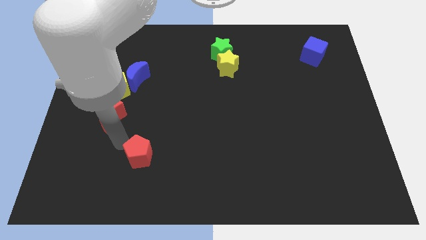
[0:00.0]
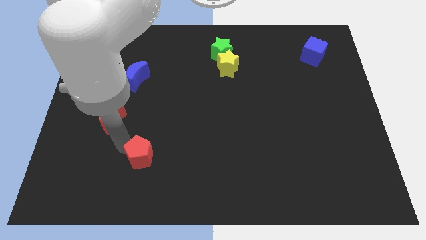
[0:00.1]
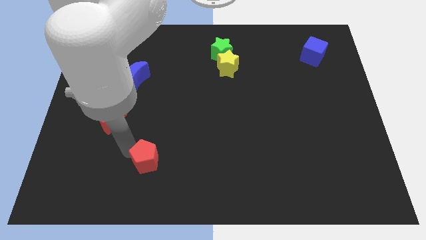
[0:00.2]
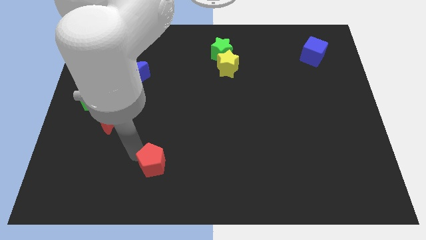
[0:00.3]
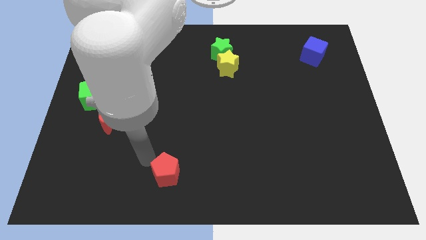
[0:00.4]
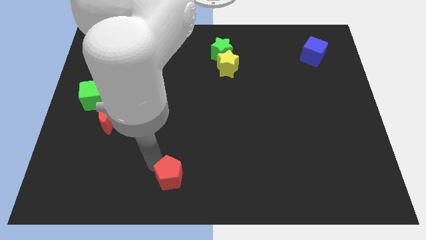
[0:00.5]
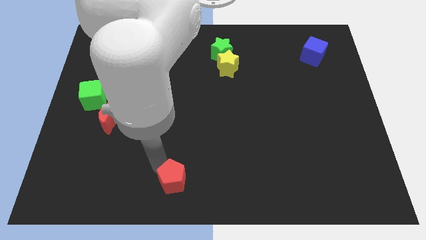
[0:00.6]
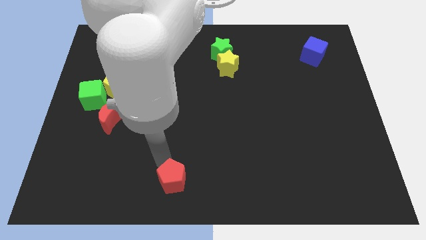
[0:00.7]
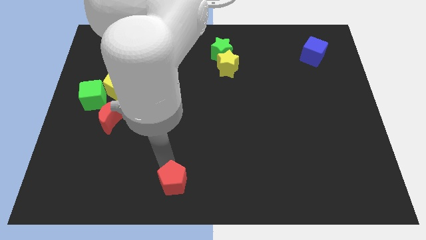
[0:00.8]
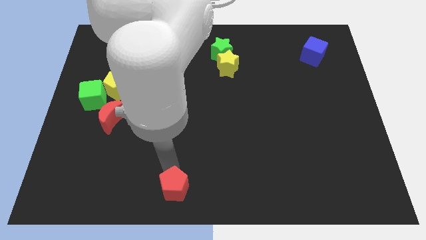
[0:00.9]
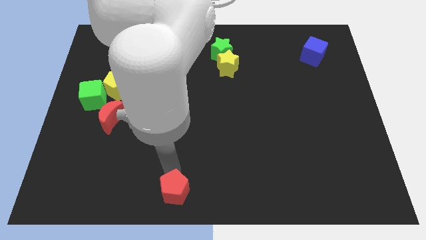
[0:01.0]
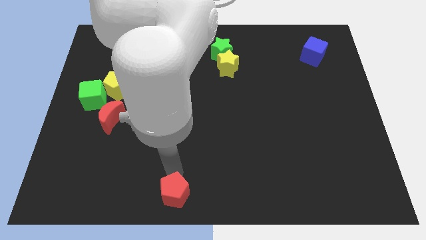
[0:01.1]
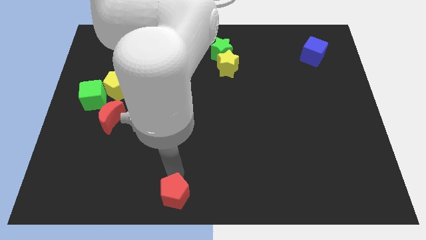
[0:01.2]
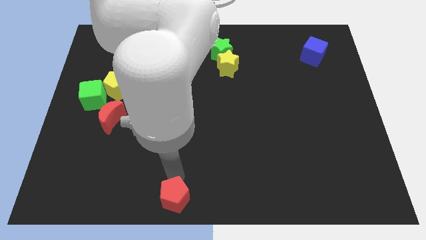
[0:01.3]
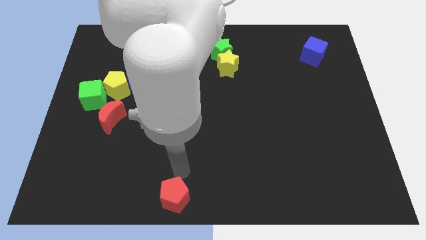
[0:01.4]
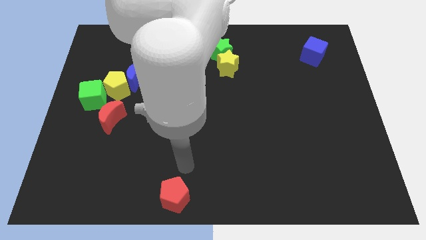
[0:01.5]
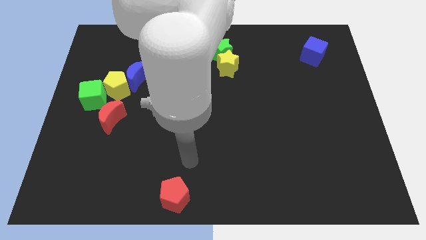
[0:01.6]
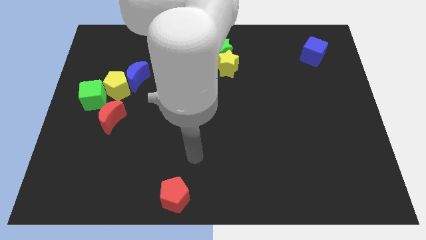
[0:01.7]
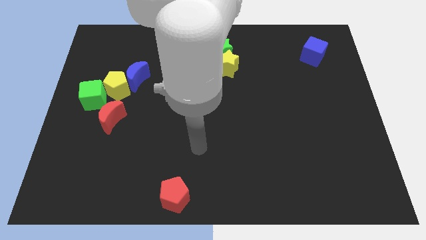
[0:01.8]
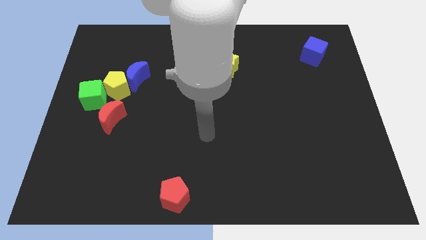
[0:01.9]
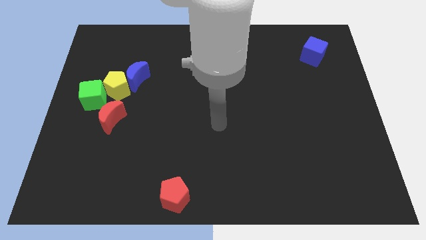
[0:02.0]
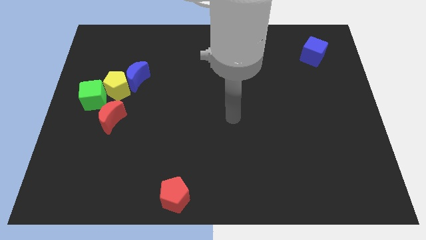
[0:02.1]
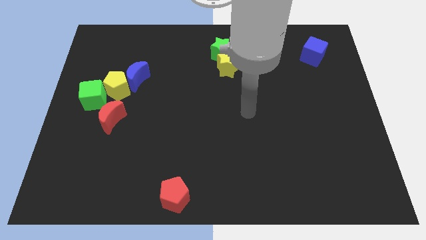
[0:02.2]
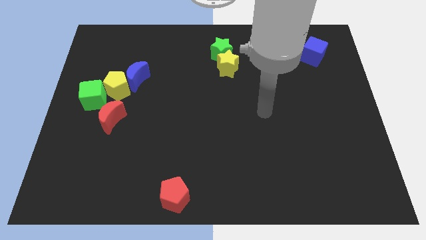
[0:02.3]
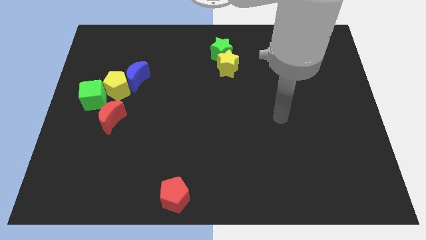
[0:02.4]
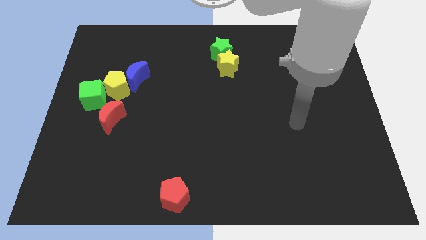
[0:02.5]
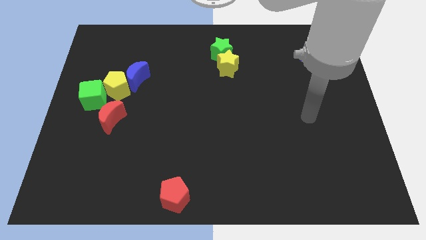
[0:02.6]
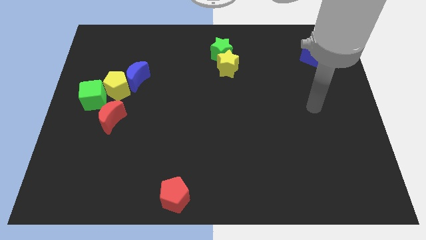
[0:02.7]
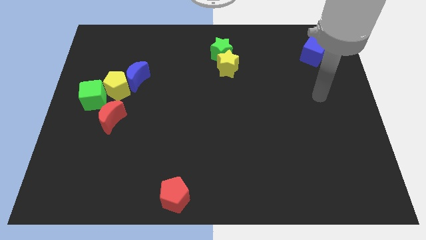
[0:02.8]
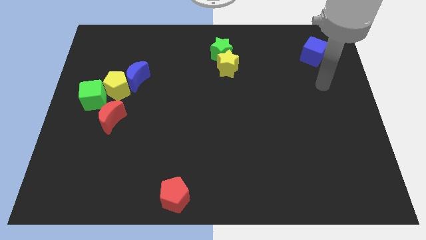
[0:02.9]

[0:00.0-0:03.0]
push the red pentagon to the bottom of the board

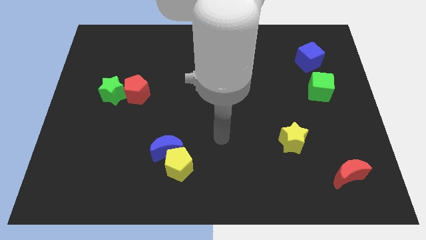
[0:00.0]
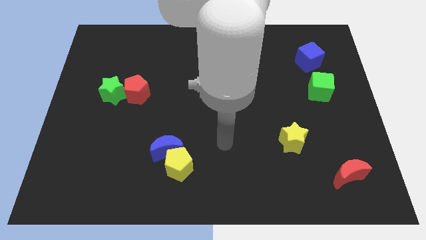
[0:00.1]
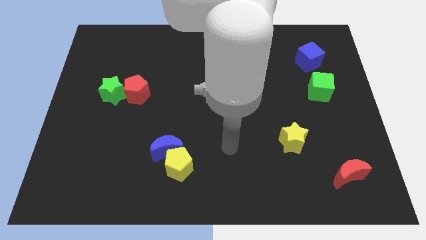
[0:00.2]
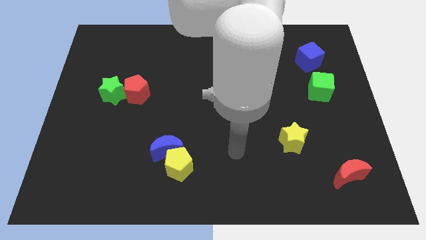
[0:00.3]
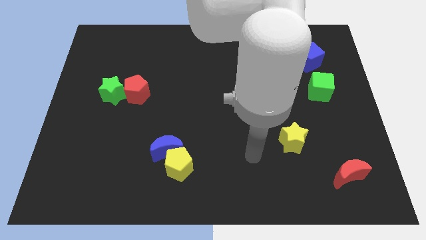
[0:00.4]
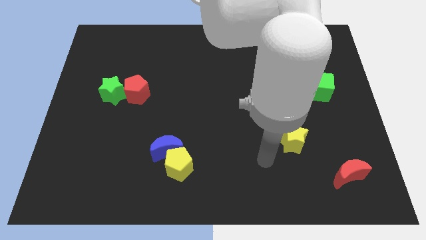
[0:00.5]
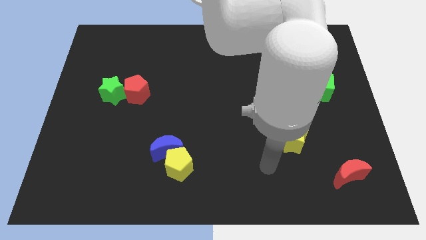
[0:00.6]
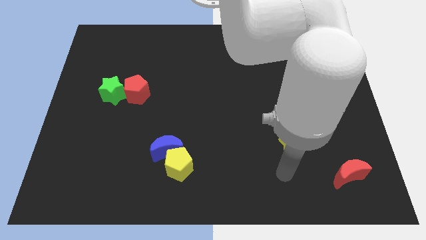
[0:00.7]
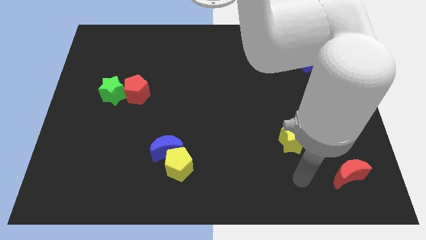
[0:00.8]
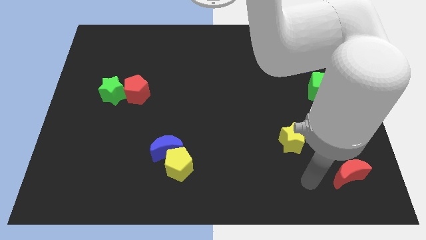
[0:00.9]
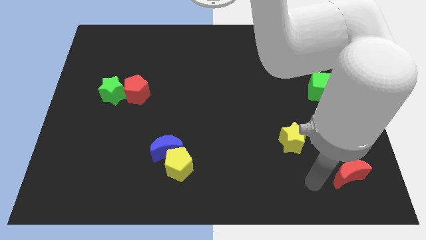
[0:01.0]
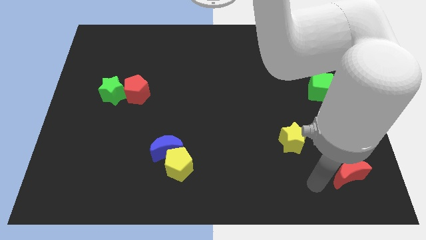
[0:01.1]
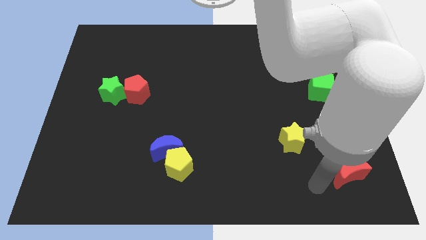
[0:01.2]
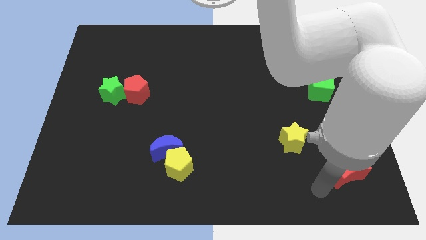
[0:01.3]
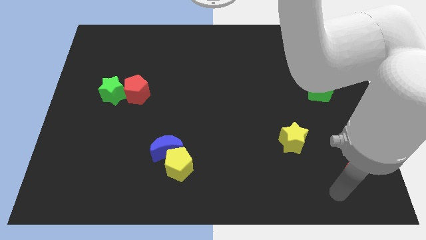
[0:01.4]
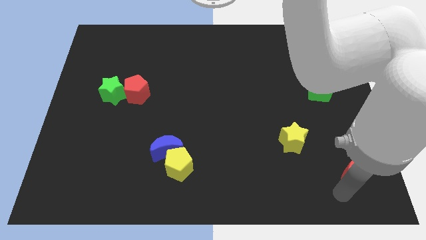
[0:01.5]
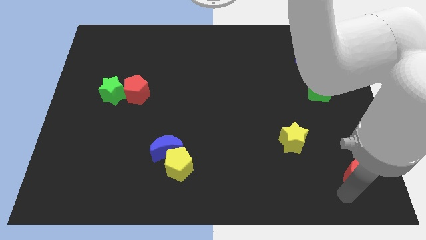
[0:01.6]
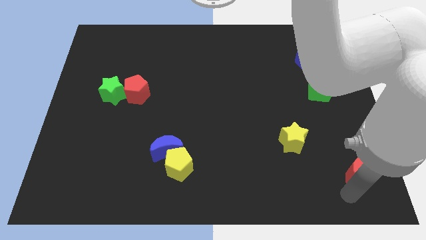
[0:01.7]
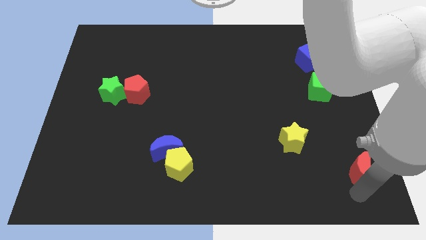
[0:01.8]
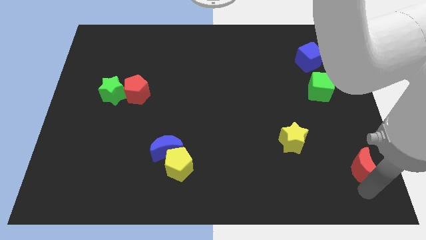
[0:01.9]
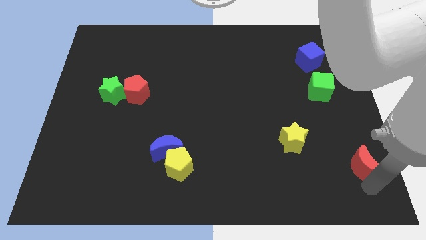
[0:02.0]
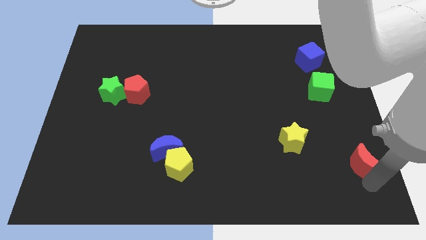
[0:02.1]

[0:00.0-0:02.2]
slide the red moon slightly to the right

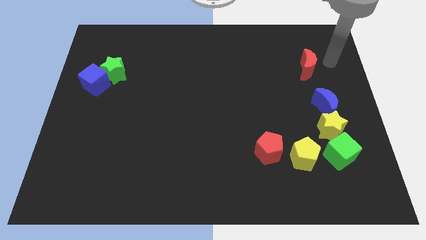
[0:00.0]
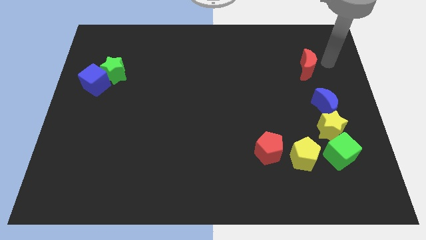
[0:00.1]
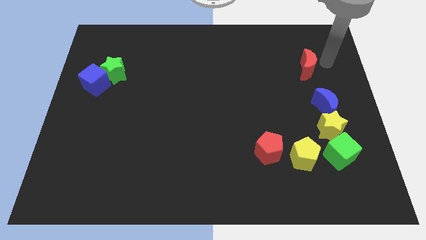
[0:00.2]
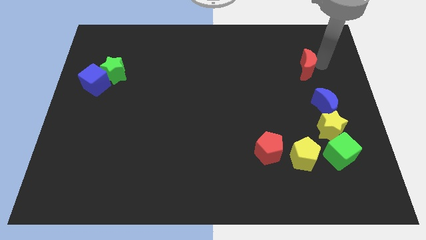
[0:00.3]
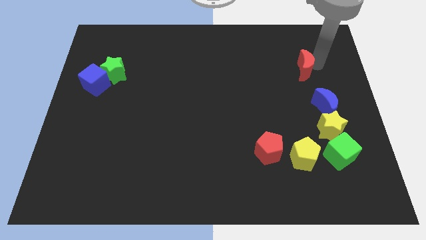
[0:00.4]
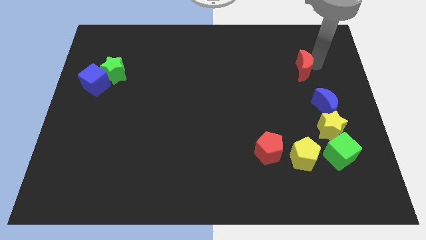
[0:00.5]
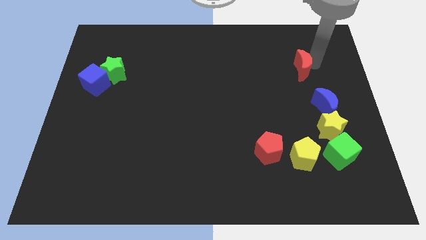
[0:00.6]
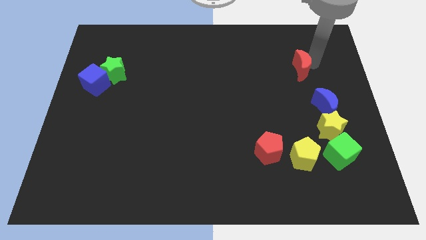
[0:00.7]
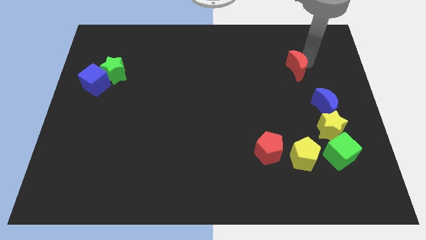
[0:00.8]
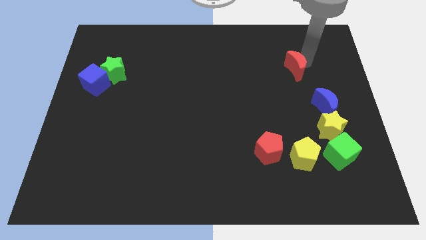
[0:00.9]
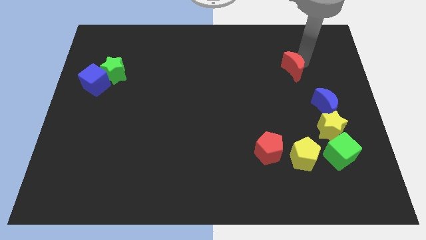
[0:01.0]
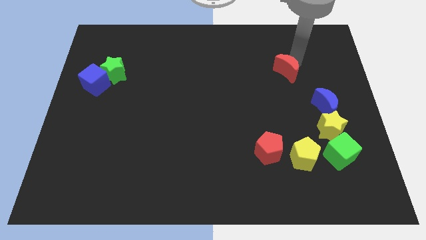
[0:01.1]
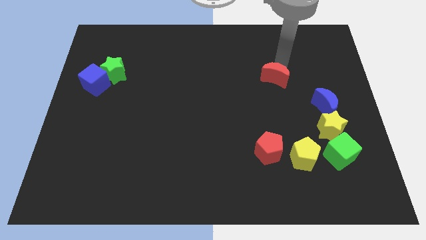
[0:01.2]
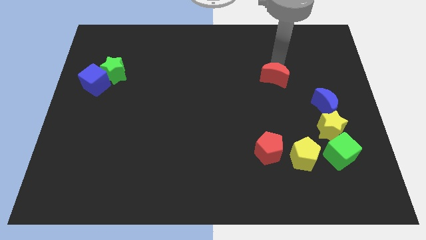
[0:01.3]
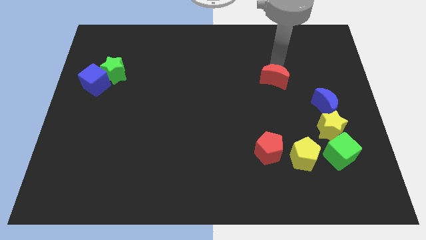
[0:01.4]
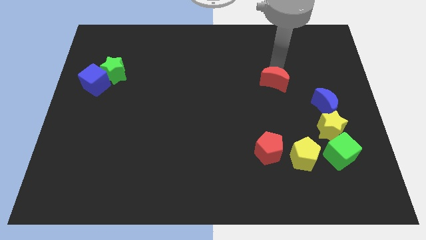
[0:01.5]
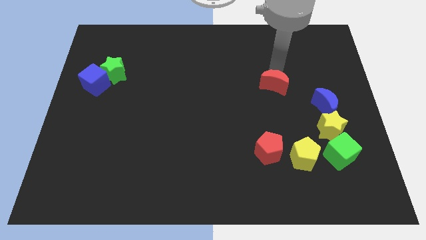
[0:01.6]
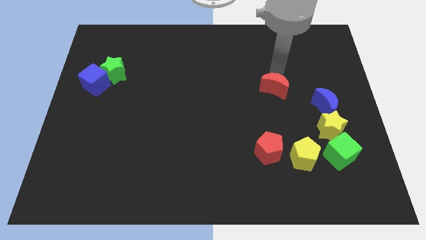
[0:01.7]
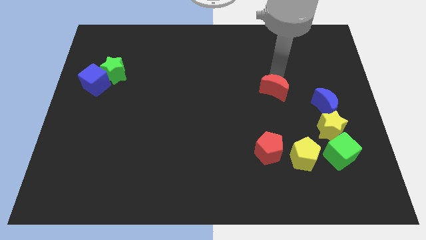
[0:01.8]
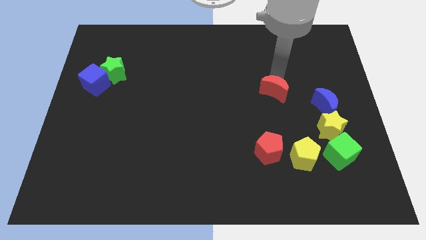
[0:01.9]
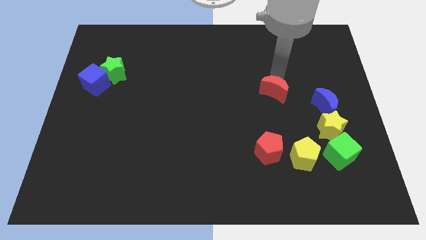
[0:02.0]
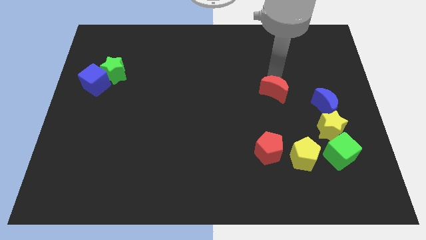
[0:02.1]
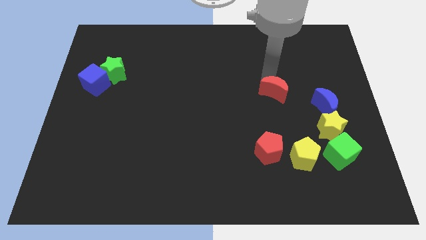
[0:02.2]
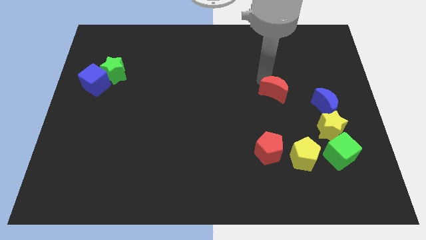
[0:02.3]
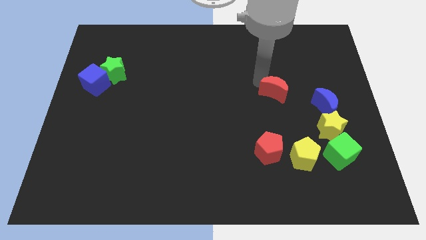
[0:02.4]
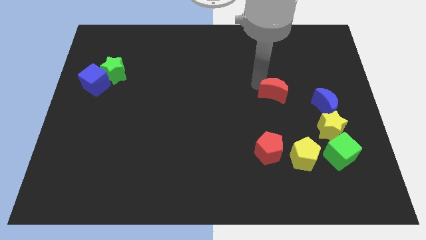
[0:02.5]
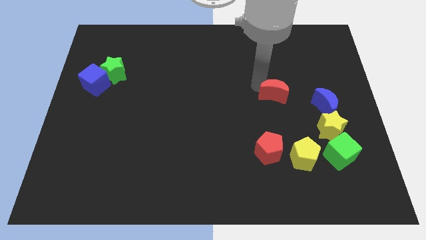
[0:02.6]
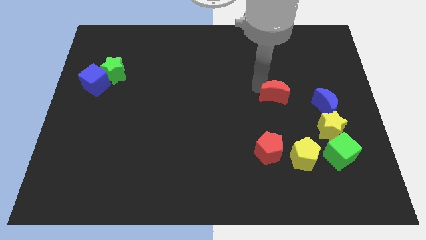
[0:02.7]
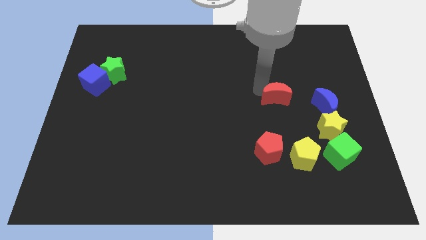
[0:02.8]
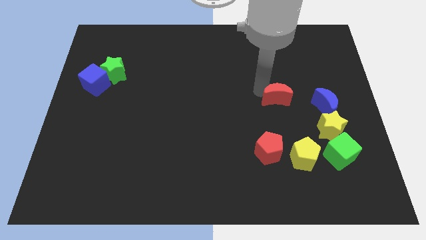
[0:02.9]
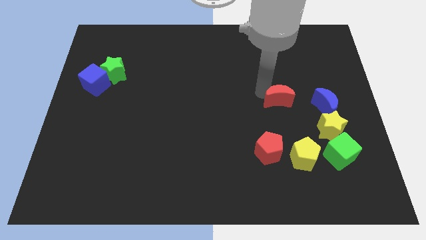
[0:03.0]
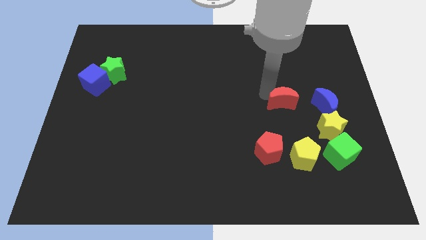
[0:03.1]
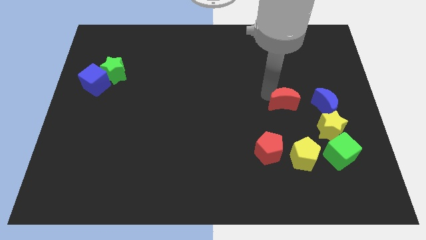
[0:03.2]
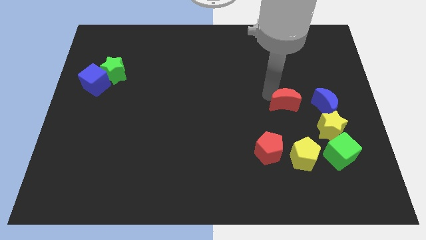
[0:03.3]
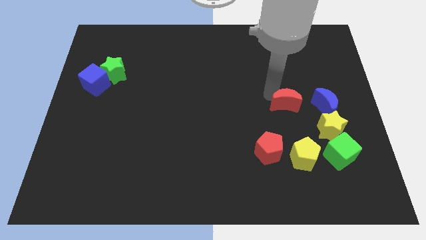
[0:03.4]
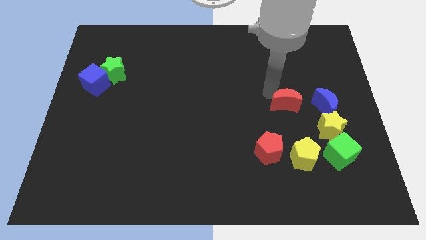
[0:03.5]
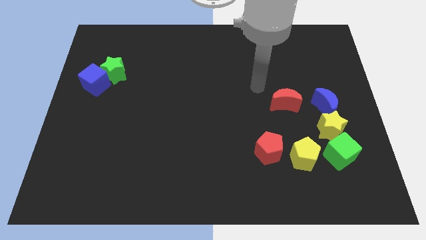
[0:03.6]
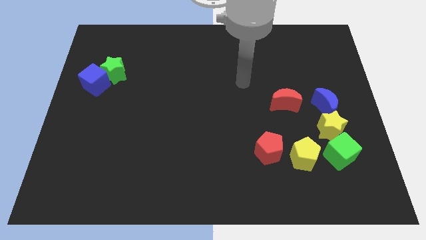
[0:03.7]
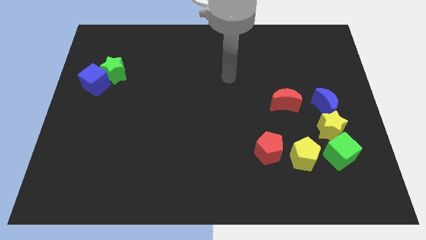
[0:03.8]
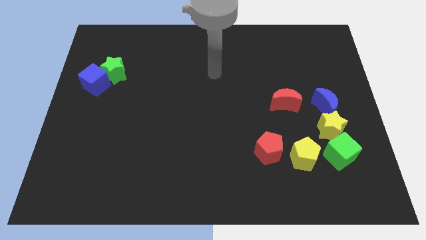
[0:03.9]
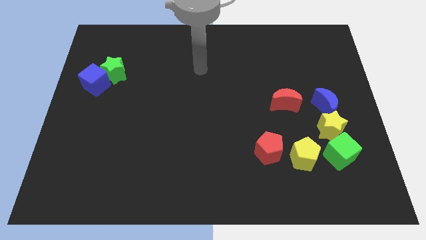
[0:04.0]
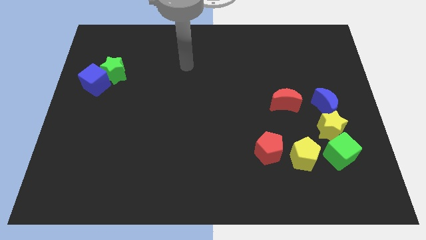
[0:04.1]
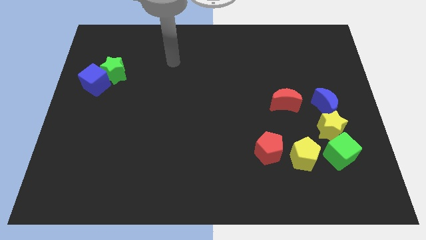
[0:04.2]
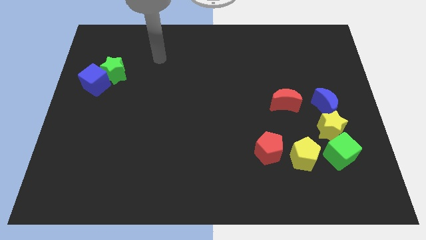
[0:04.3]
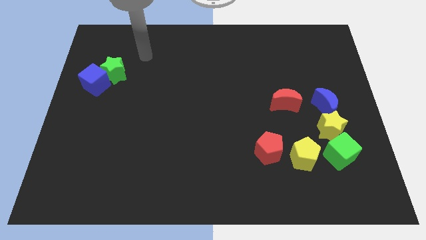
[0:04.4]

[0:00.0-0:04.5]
move the red moon left beside the blue moon
